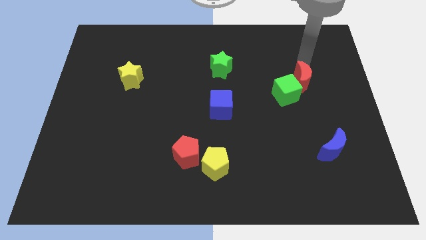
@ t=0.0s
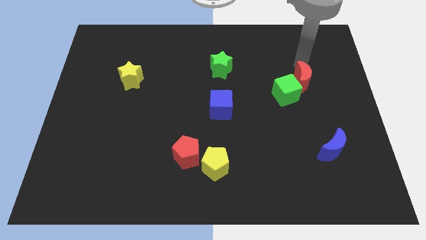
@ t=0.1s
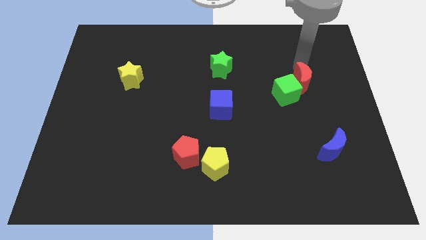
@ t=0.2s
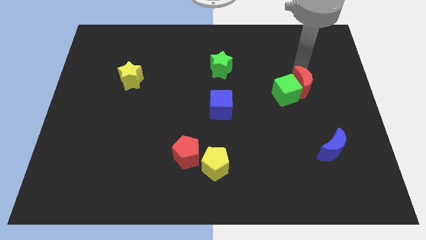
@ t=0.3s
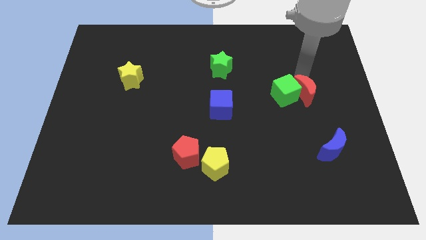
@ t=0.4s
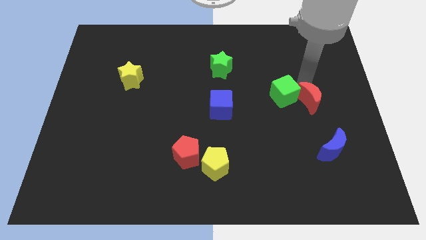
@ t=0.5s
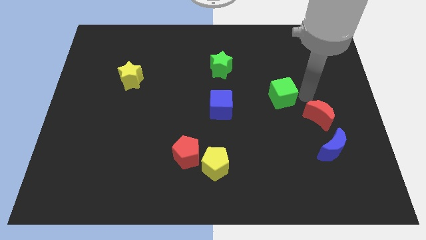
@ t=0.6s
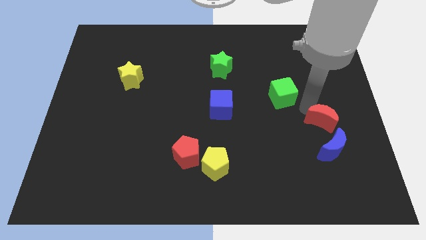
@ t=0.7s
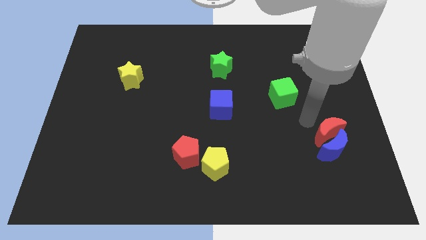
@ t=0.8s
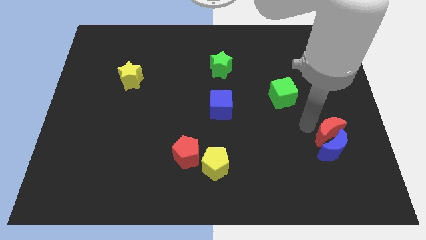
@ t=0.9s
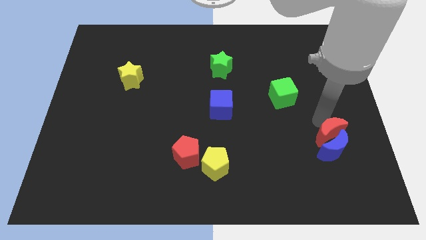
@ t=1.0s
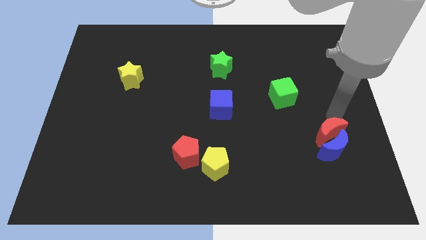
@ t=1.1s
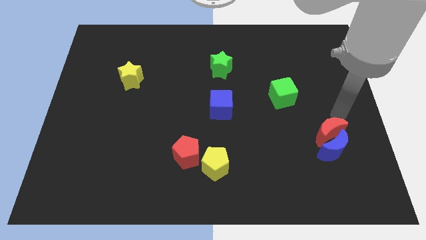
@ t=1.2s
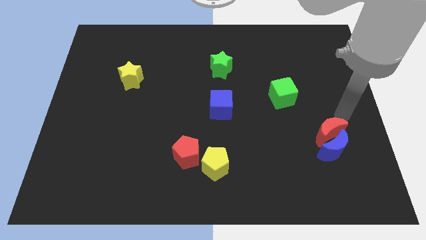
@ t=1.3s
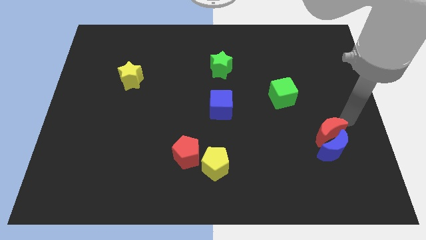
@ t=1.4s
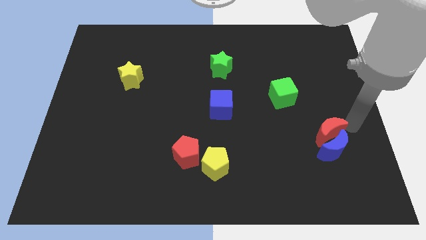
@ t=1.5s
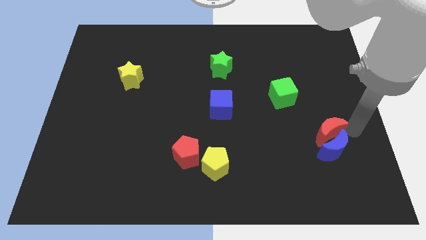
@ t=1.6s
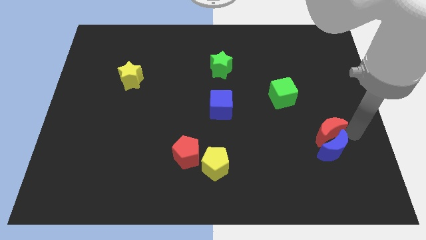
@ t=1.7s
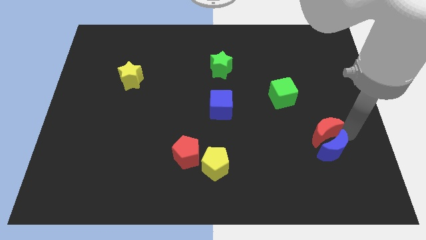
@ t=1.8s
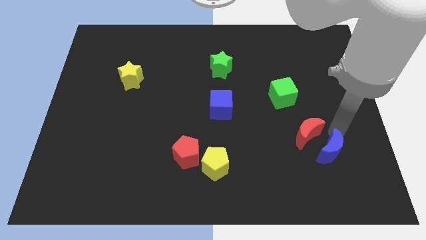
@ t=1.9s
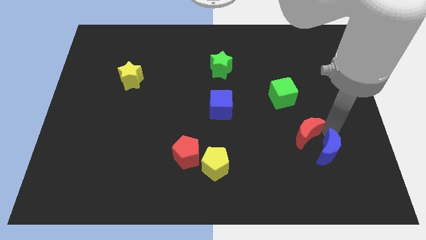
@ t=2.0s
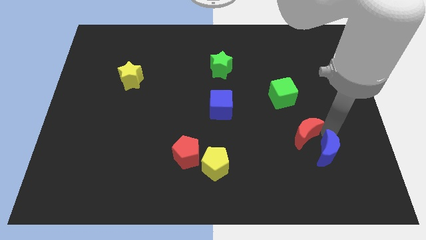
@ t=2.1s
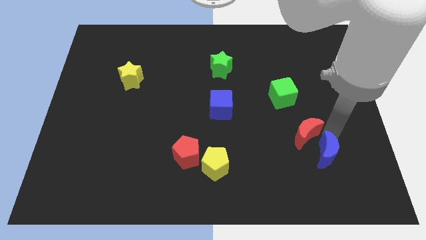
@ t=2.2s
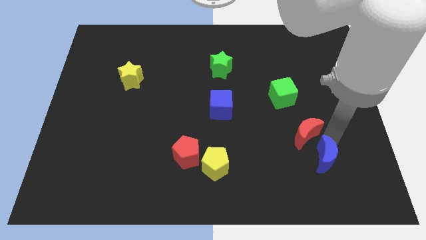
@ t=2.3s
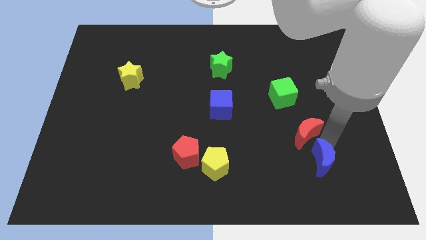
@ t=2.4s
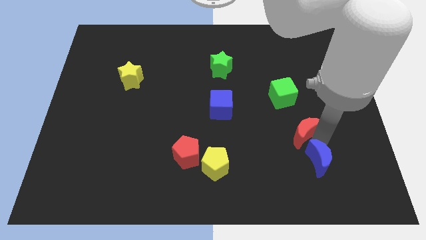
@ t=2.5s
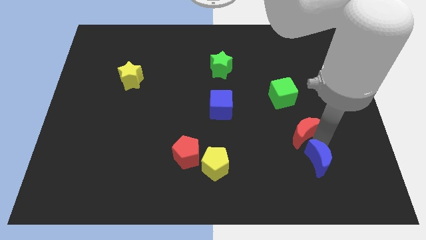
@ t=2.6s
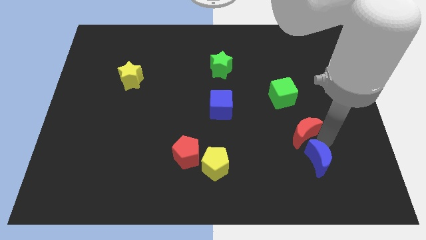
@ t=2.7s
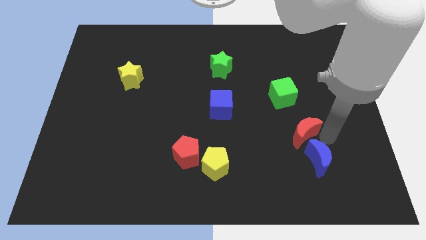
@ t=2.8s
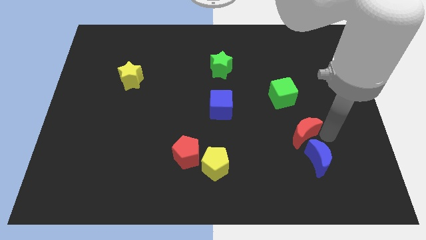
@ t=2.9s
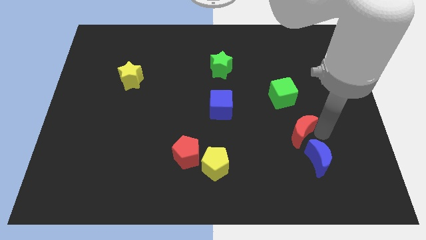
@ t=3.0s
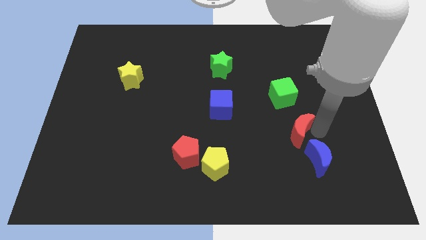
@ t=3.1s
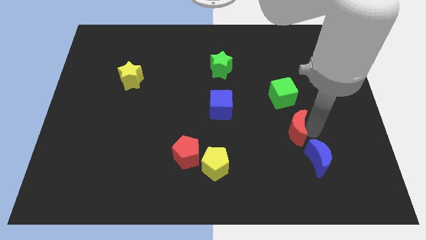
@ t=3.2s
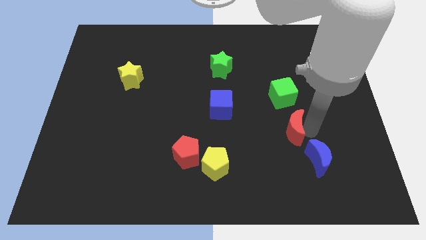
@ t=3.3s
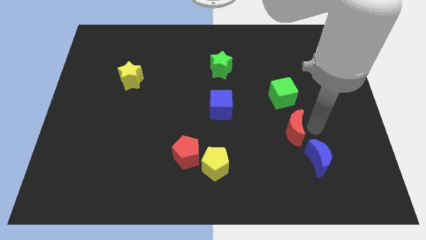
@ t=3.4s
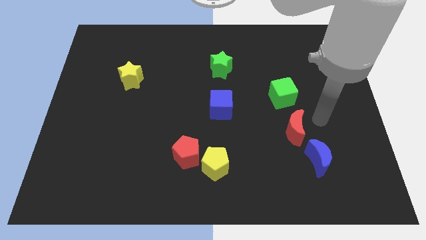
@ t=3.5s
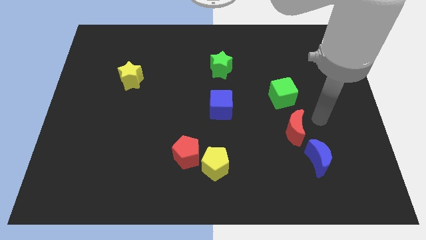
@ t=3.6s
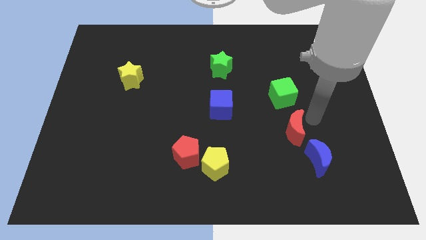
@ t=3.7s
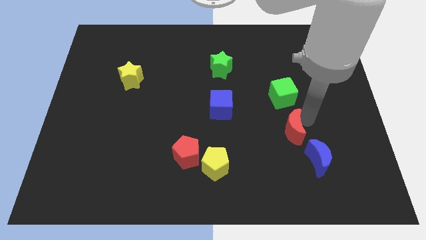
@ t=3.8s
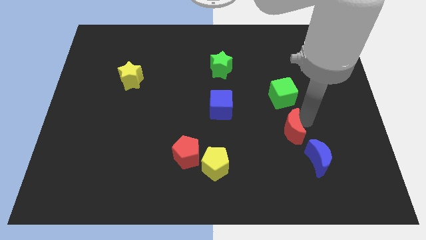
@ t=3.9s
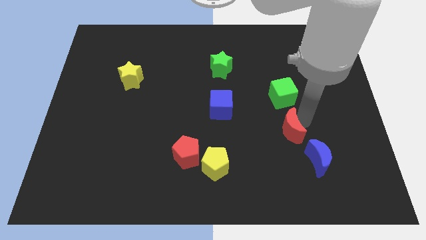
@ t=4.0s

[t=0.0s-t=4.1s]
push the red crescent in between the green cube and the blue crescent

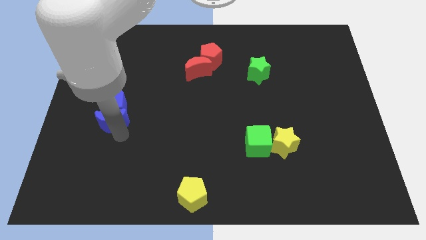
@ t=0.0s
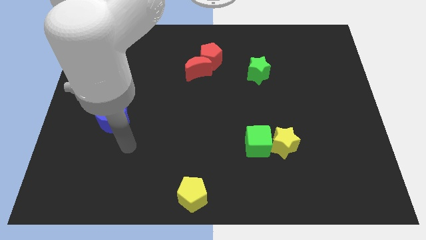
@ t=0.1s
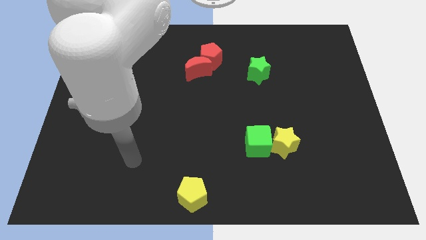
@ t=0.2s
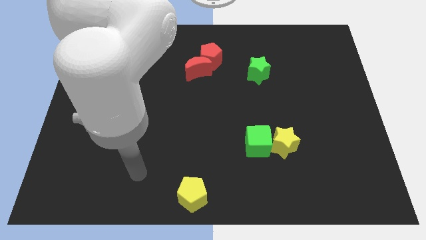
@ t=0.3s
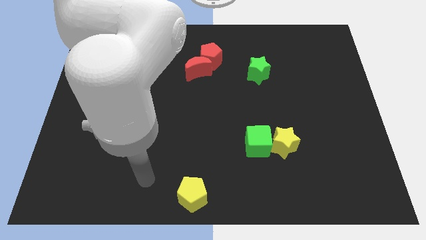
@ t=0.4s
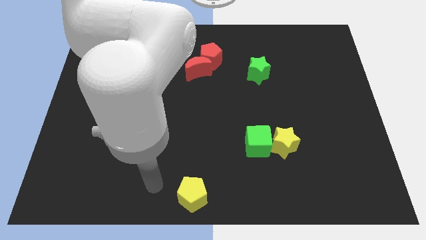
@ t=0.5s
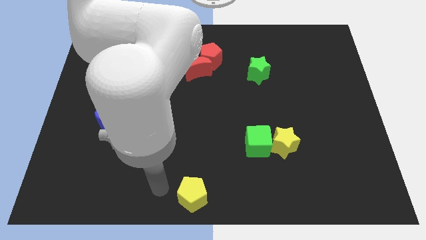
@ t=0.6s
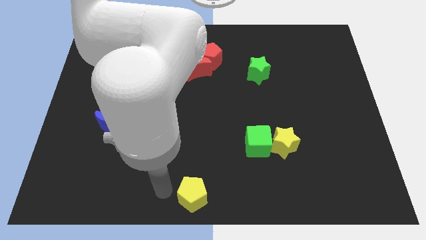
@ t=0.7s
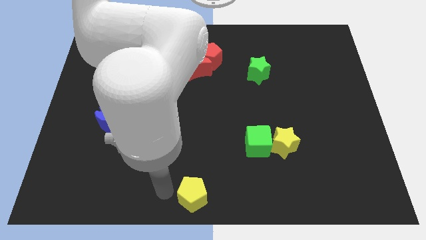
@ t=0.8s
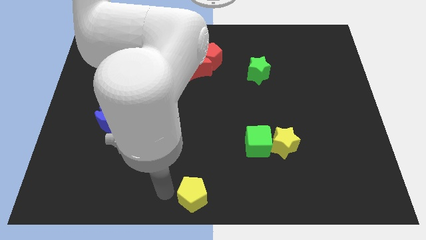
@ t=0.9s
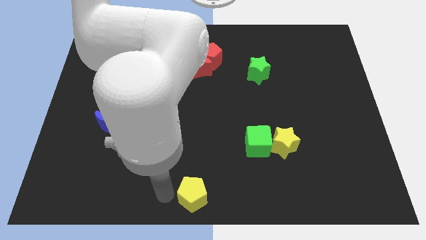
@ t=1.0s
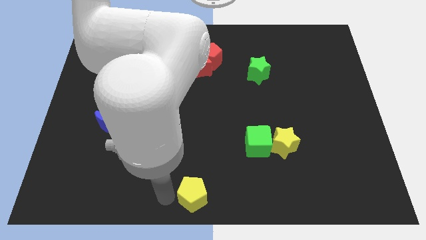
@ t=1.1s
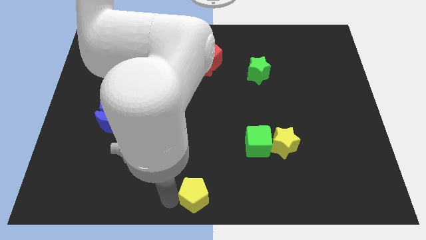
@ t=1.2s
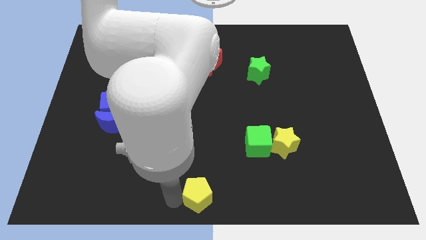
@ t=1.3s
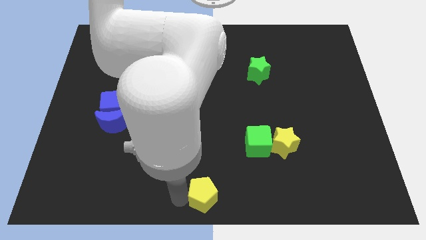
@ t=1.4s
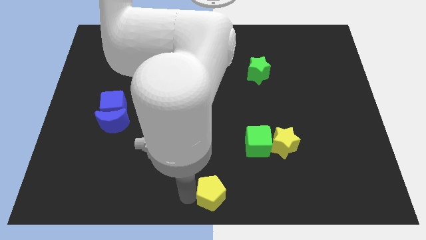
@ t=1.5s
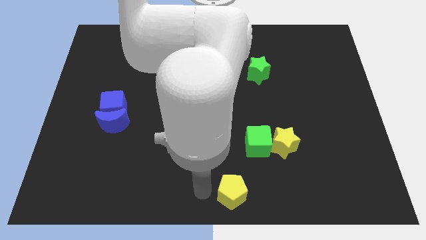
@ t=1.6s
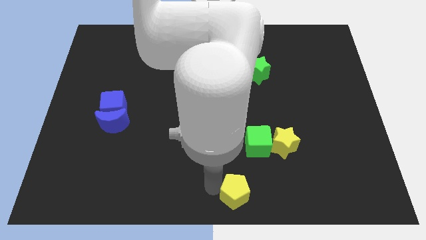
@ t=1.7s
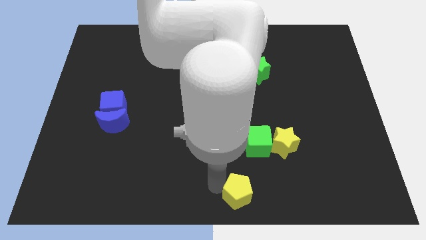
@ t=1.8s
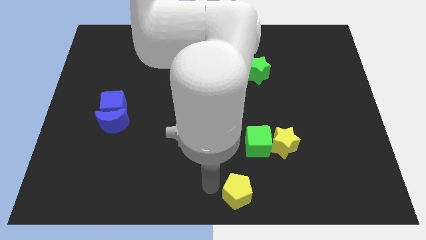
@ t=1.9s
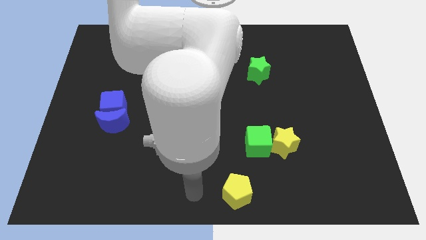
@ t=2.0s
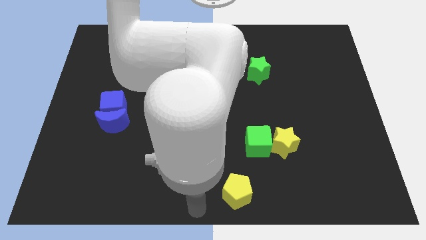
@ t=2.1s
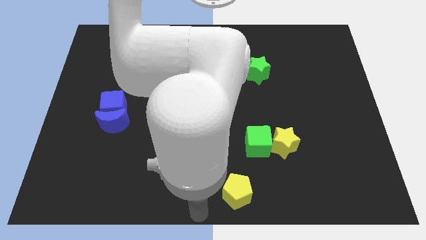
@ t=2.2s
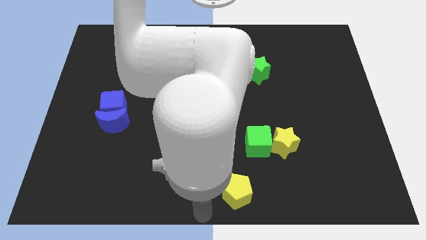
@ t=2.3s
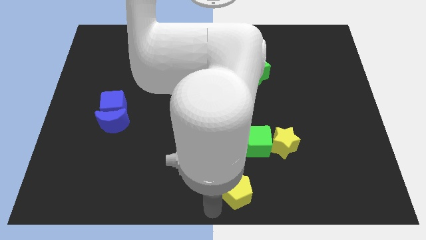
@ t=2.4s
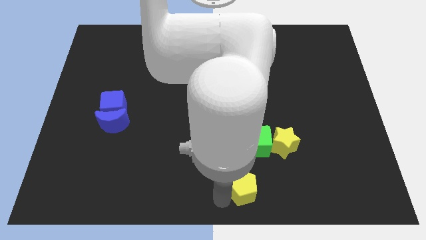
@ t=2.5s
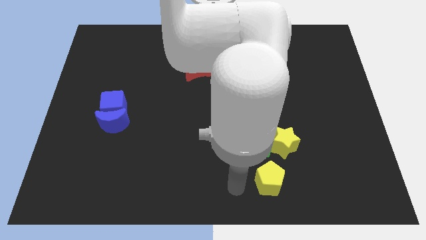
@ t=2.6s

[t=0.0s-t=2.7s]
place the yellow pentagon below the green cube

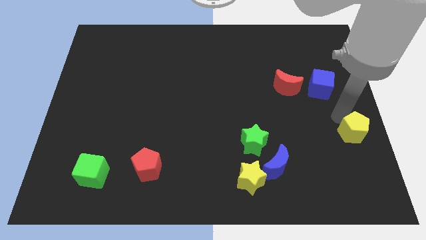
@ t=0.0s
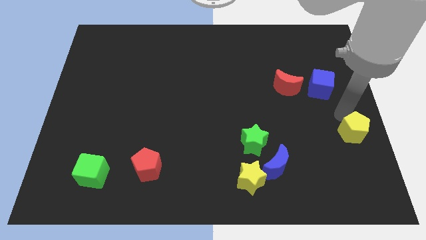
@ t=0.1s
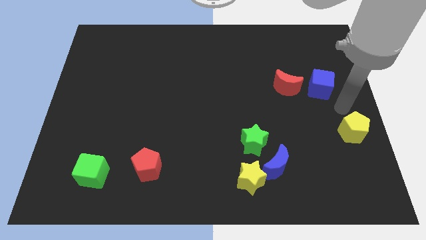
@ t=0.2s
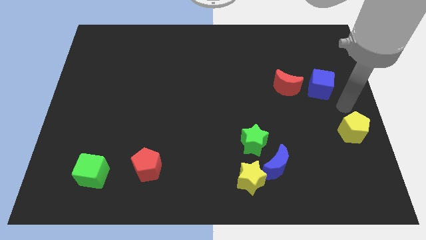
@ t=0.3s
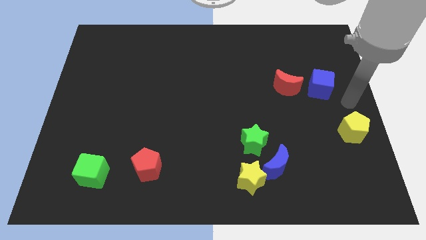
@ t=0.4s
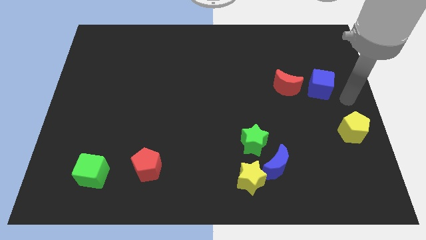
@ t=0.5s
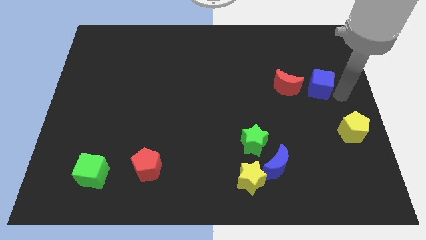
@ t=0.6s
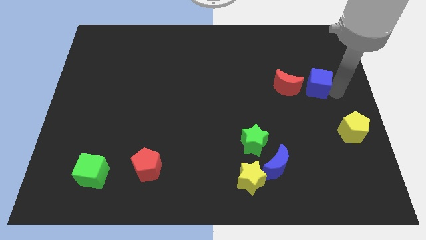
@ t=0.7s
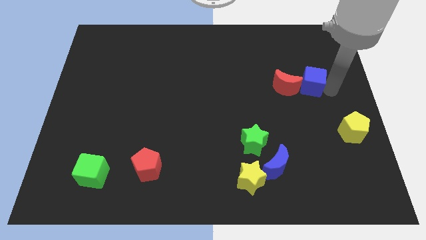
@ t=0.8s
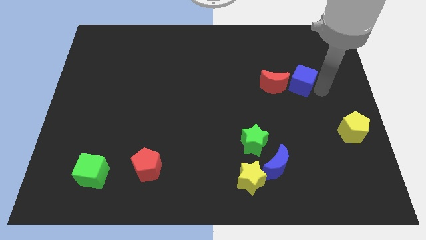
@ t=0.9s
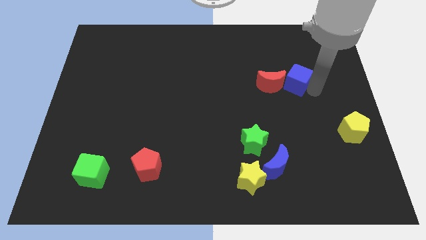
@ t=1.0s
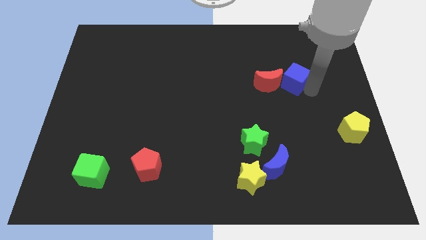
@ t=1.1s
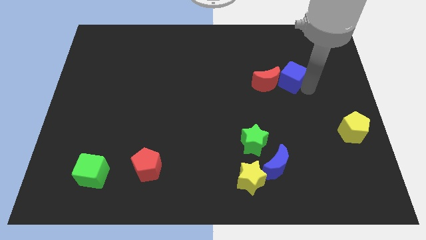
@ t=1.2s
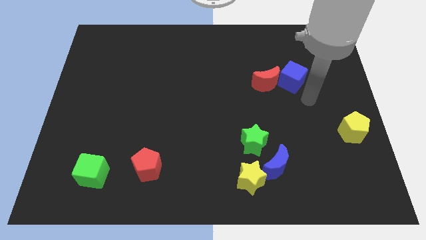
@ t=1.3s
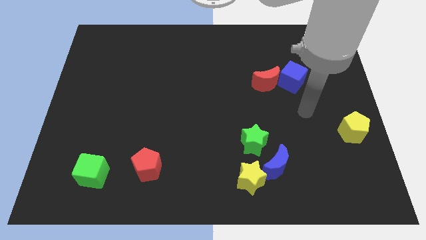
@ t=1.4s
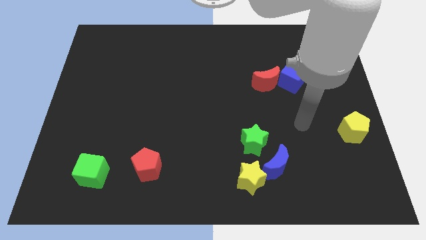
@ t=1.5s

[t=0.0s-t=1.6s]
move the blue cube into the red crescent

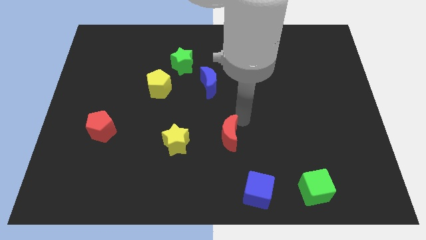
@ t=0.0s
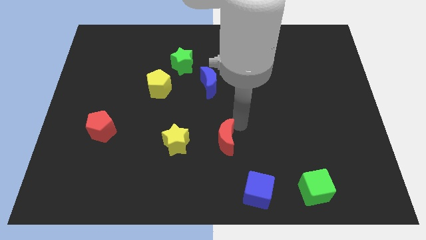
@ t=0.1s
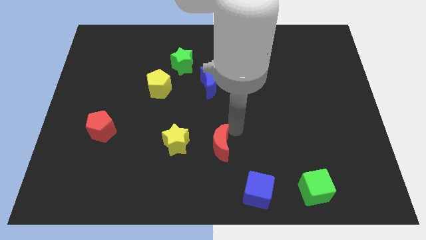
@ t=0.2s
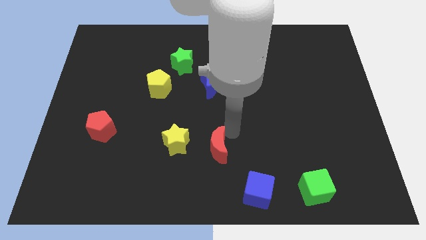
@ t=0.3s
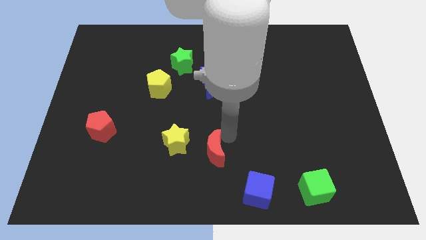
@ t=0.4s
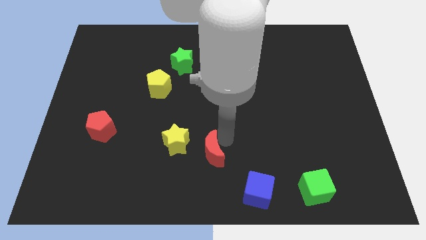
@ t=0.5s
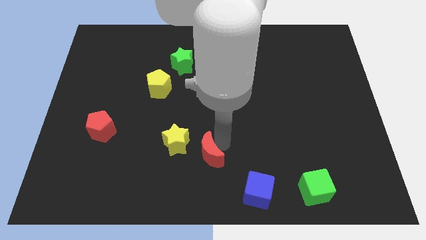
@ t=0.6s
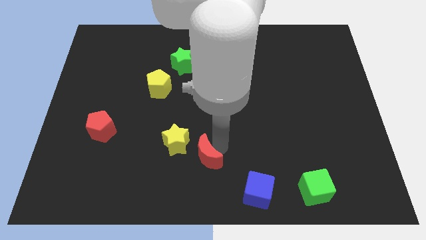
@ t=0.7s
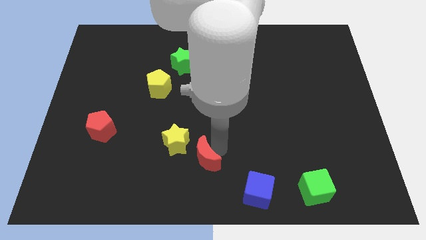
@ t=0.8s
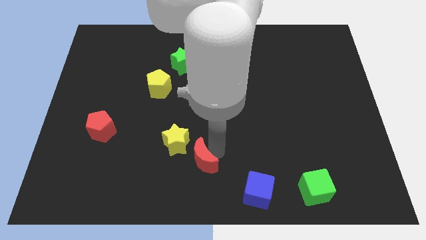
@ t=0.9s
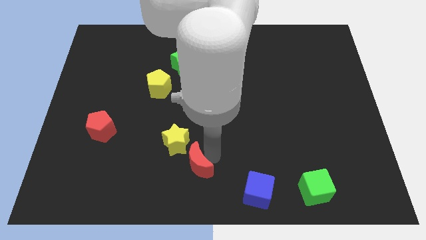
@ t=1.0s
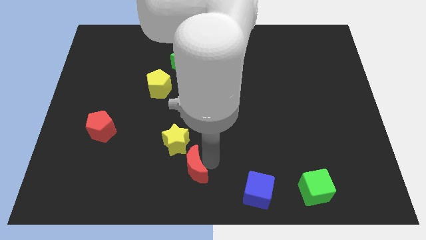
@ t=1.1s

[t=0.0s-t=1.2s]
place the red crescent in between the yellow star and blue cube
